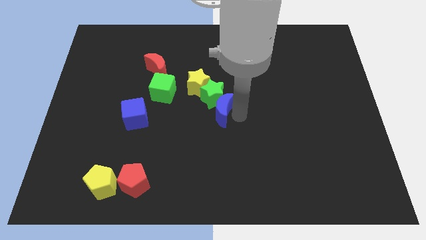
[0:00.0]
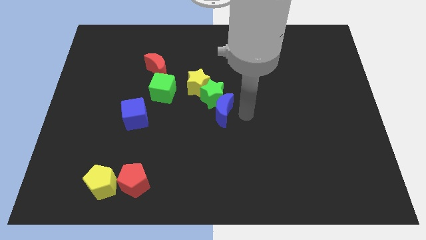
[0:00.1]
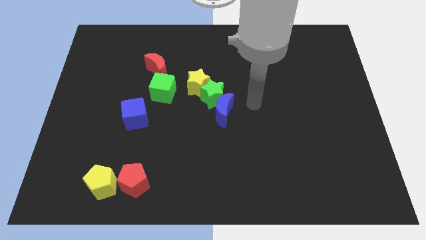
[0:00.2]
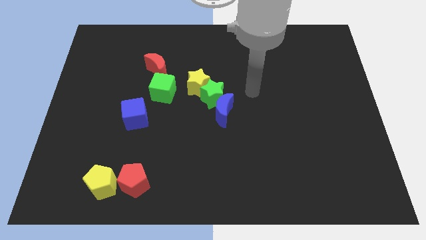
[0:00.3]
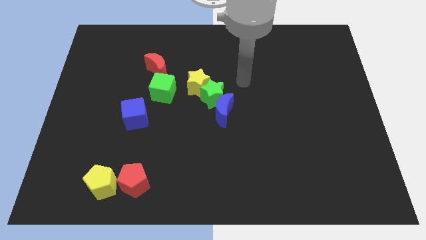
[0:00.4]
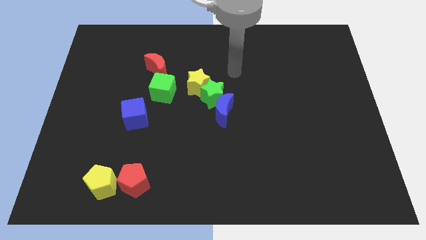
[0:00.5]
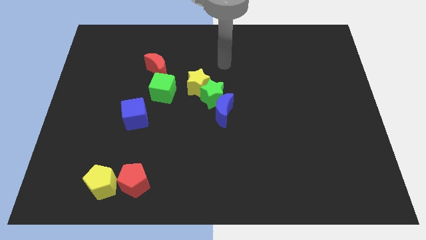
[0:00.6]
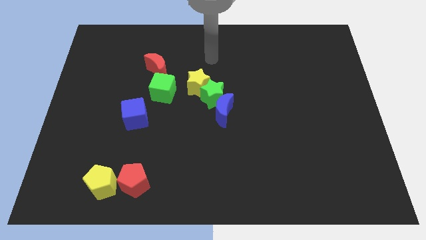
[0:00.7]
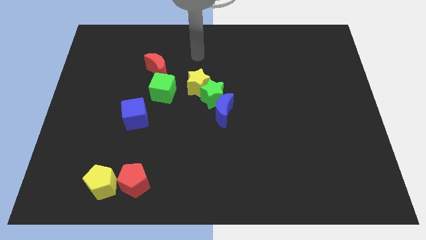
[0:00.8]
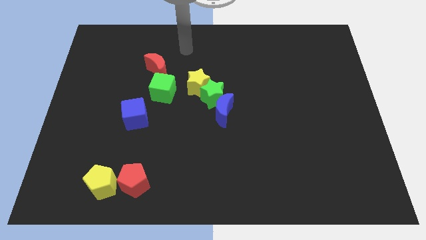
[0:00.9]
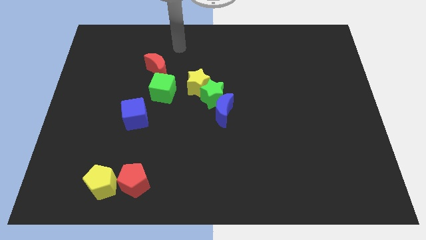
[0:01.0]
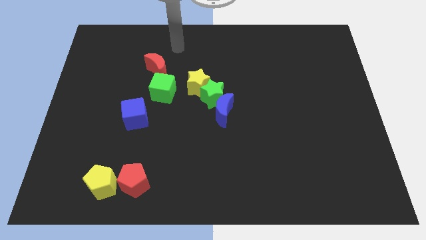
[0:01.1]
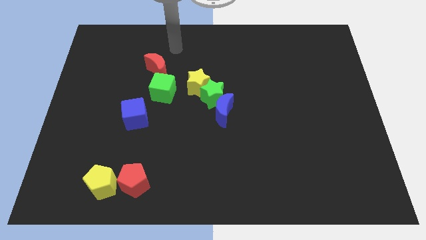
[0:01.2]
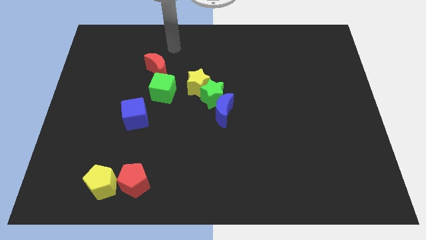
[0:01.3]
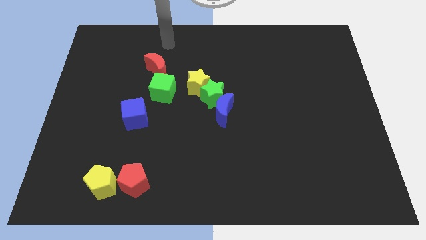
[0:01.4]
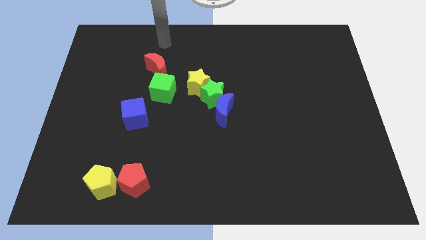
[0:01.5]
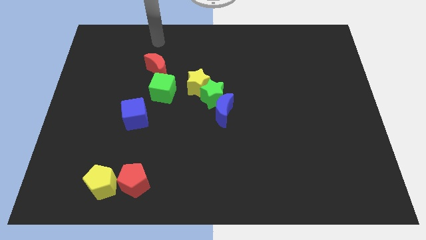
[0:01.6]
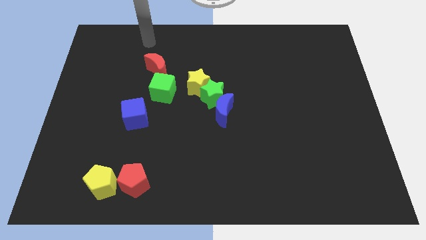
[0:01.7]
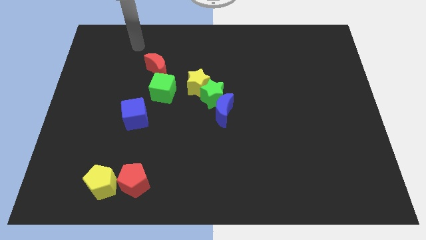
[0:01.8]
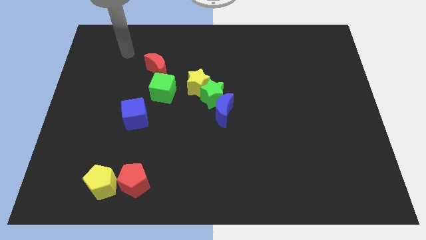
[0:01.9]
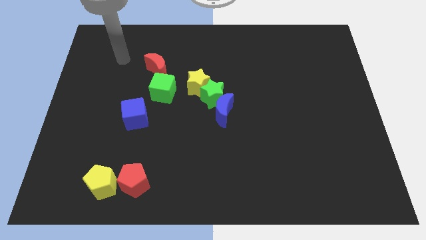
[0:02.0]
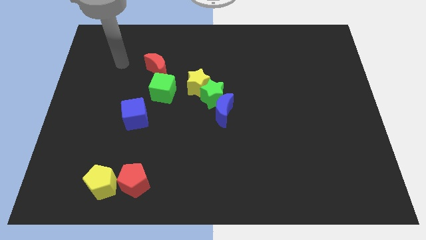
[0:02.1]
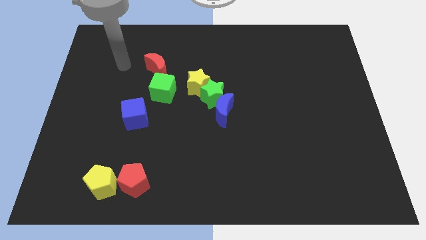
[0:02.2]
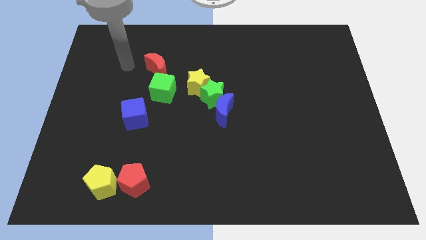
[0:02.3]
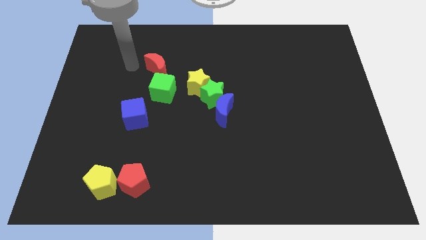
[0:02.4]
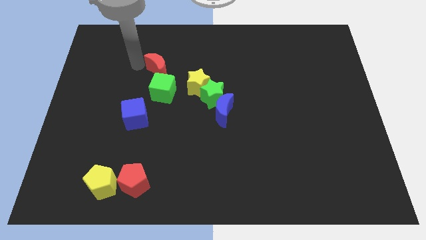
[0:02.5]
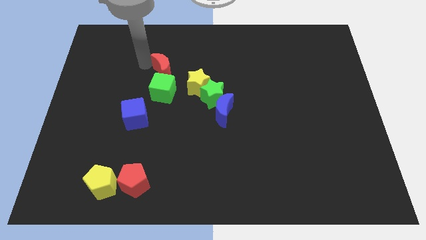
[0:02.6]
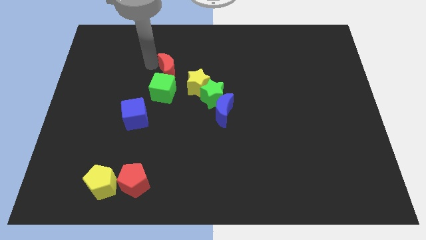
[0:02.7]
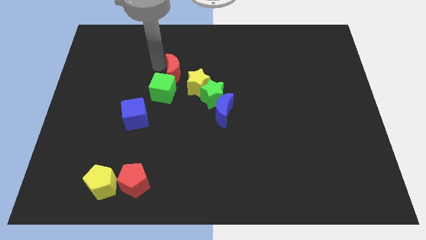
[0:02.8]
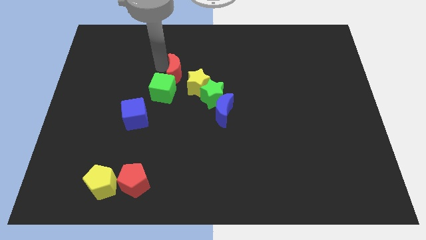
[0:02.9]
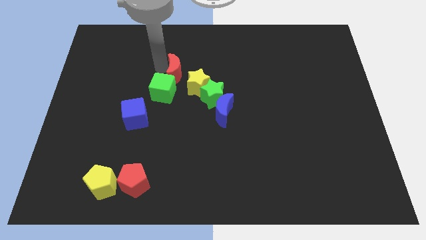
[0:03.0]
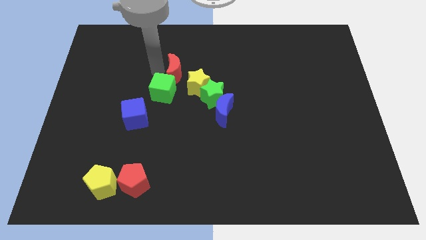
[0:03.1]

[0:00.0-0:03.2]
slightly push the red crescent towards the center of the board

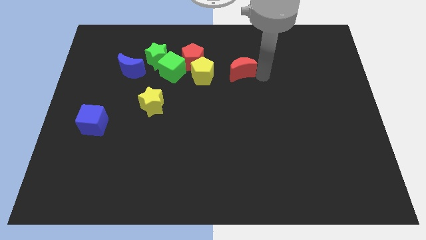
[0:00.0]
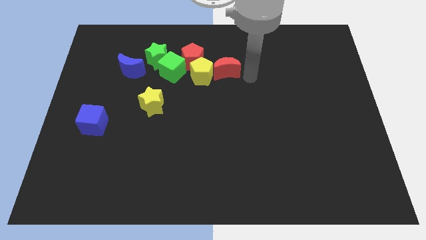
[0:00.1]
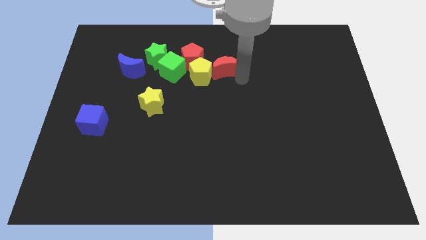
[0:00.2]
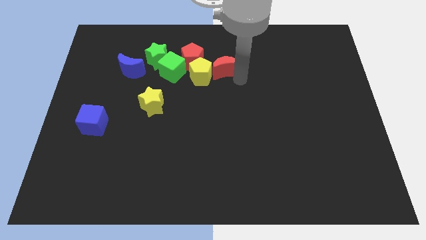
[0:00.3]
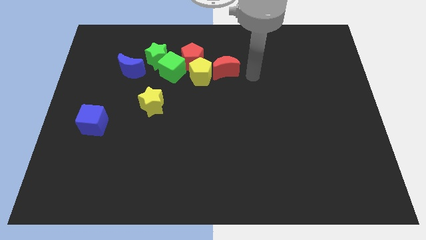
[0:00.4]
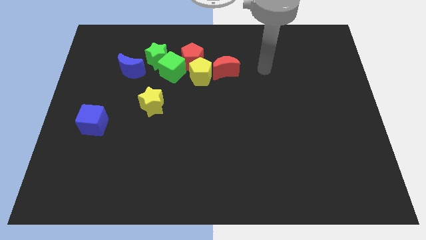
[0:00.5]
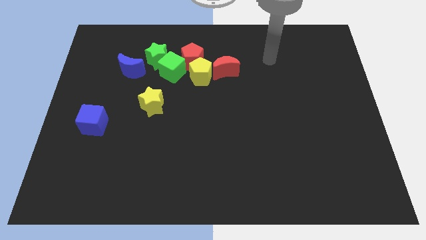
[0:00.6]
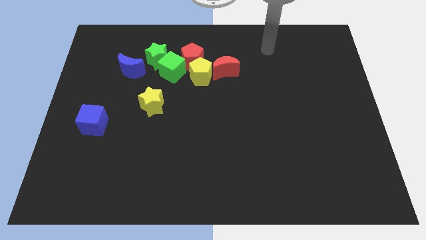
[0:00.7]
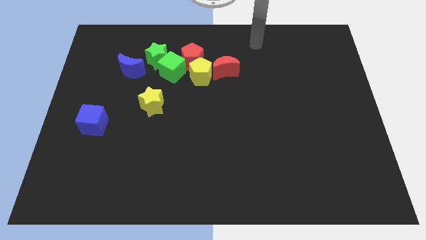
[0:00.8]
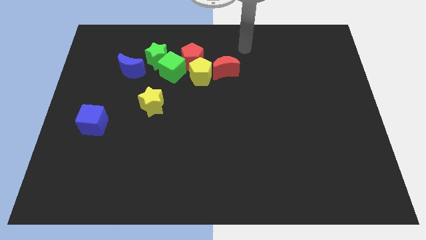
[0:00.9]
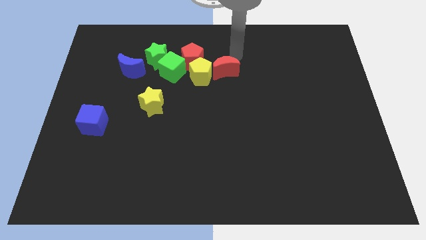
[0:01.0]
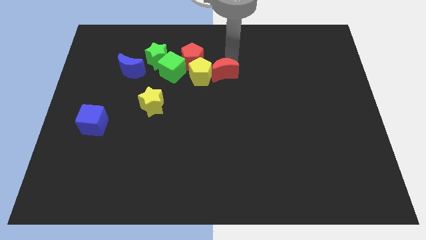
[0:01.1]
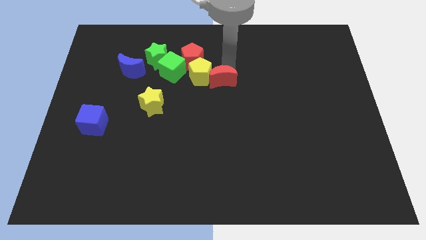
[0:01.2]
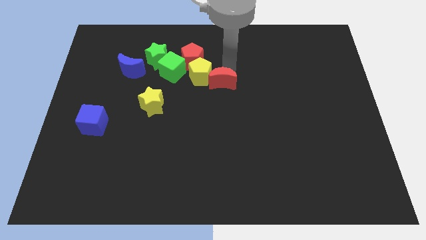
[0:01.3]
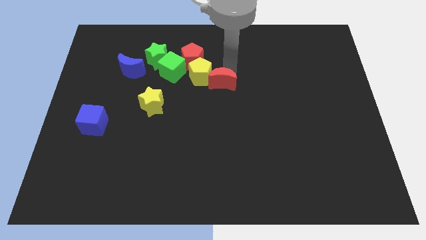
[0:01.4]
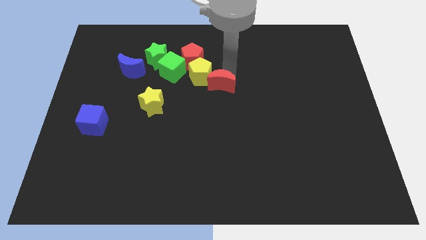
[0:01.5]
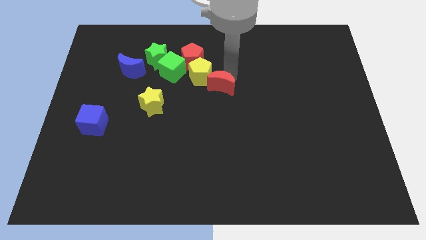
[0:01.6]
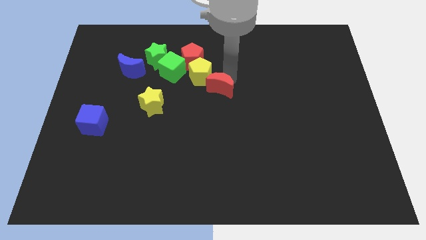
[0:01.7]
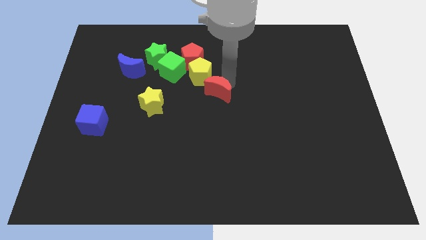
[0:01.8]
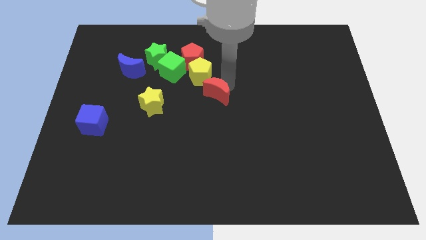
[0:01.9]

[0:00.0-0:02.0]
push the red moon to the bottom right of the yellow pentagon

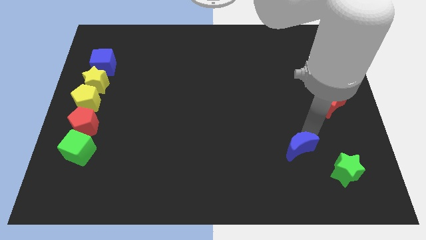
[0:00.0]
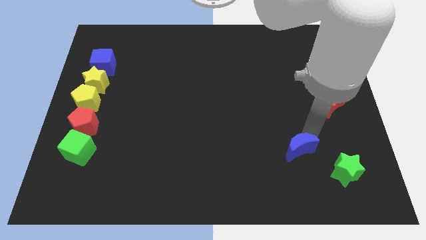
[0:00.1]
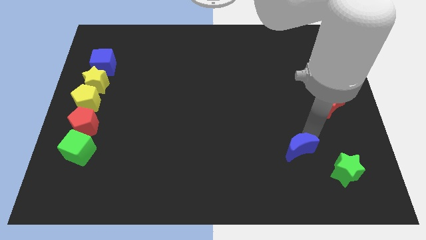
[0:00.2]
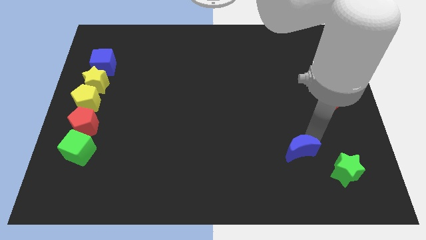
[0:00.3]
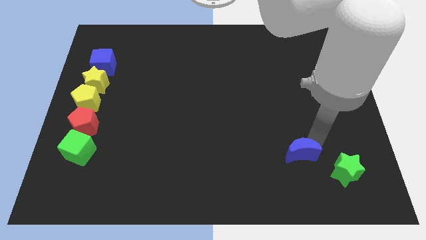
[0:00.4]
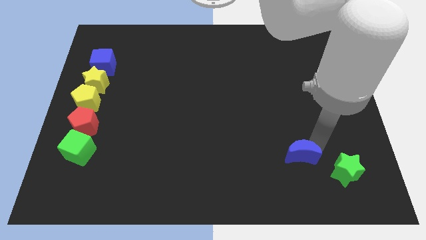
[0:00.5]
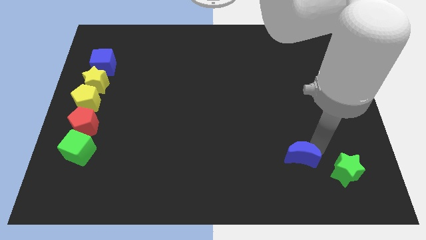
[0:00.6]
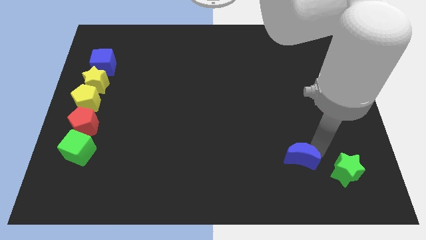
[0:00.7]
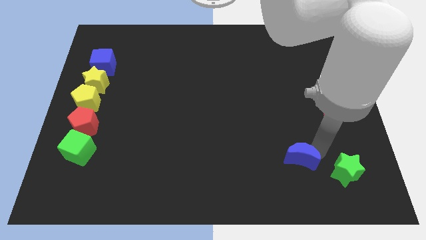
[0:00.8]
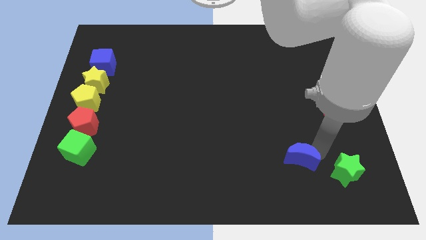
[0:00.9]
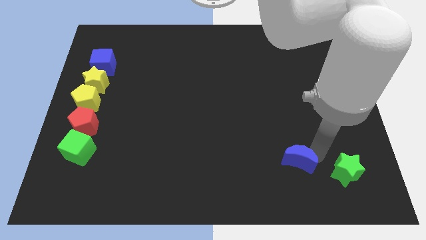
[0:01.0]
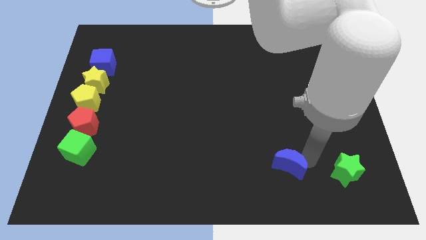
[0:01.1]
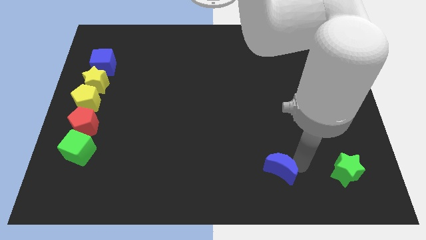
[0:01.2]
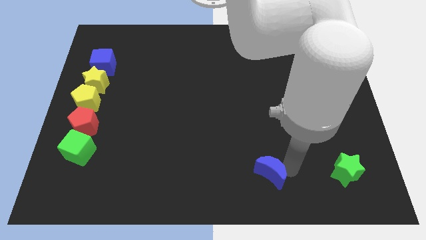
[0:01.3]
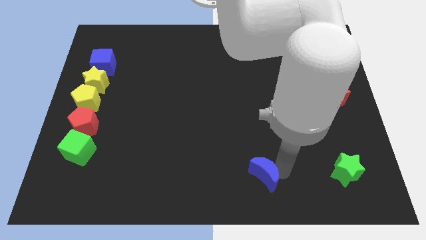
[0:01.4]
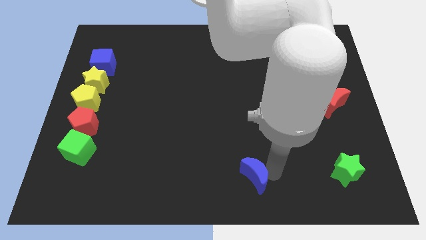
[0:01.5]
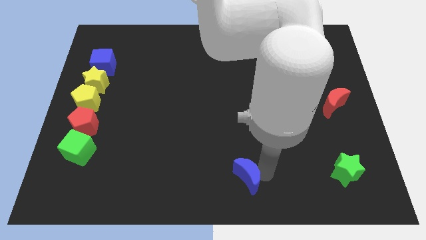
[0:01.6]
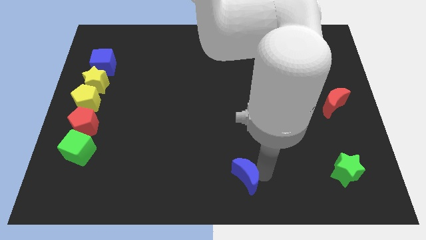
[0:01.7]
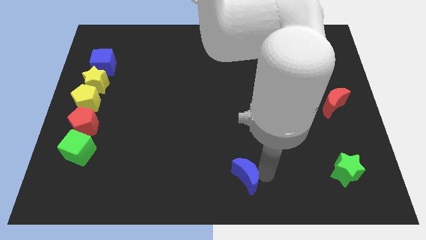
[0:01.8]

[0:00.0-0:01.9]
place blue moon parallel to green star

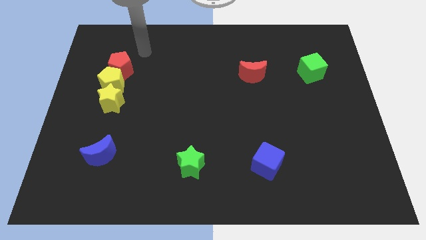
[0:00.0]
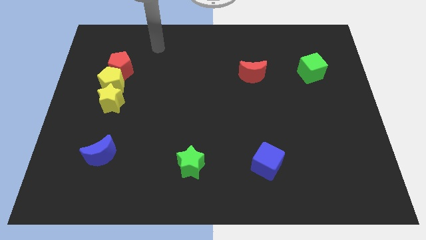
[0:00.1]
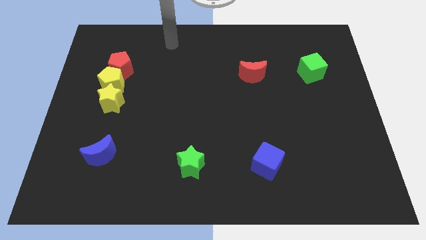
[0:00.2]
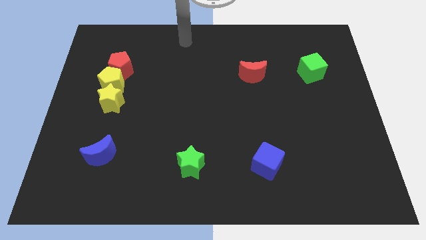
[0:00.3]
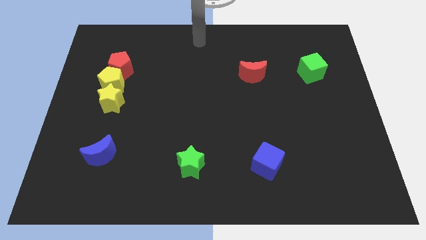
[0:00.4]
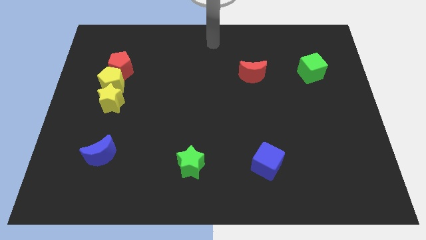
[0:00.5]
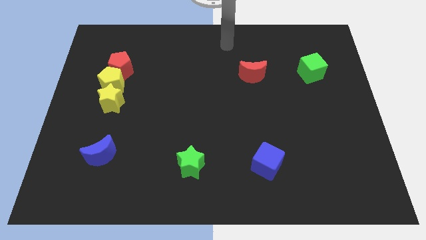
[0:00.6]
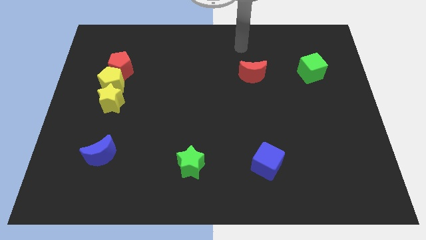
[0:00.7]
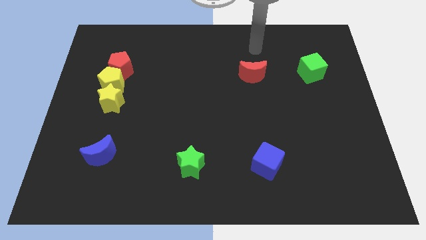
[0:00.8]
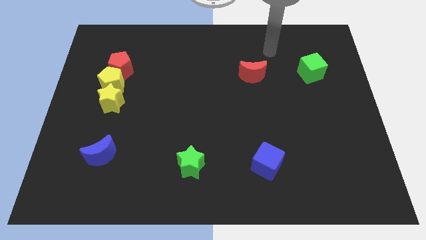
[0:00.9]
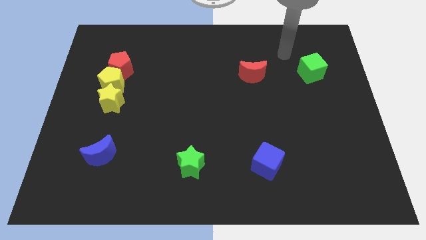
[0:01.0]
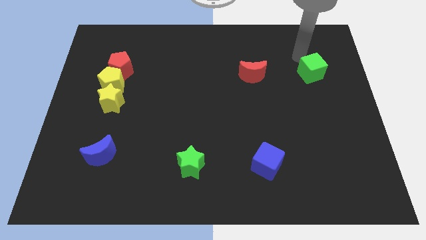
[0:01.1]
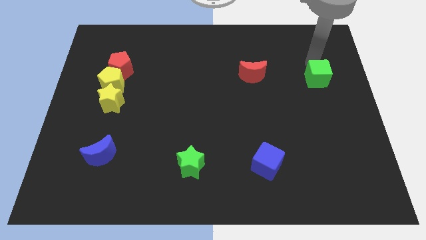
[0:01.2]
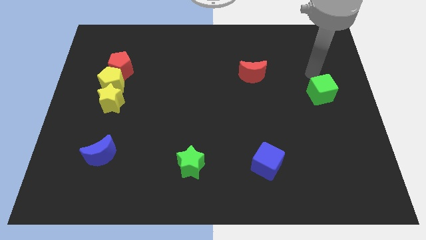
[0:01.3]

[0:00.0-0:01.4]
tap the green cube

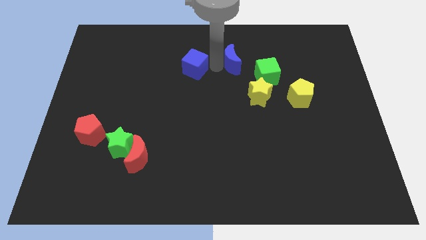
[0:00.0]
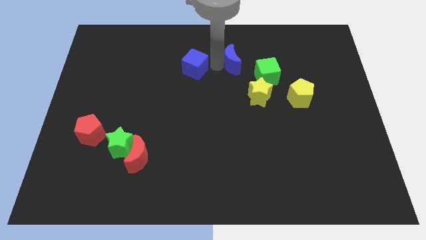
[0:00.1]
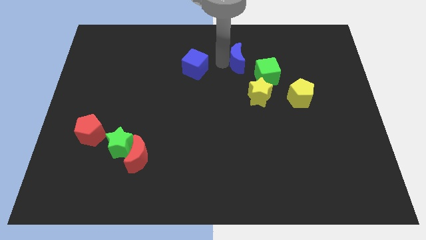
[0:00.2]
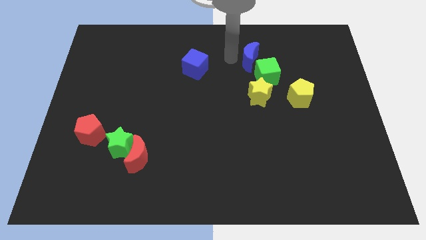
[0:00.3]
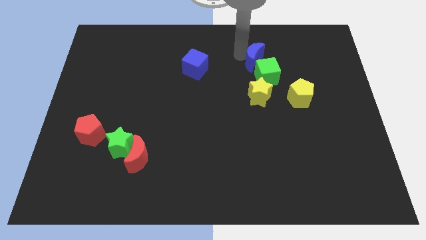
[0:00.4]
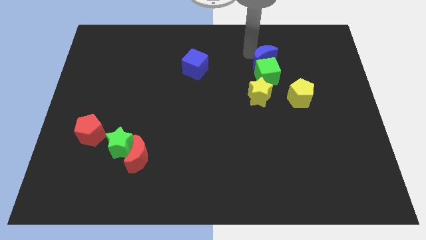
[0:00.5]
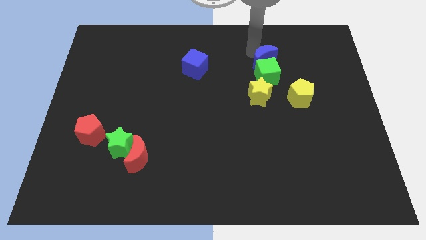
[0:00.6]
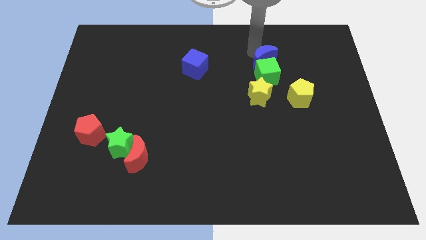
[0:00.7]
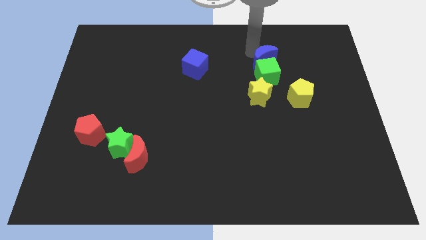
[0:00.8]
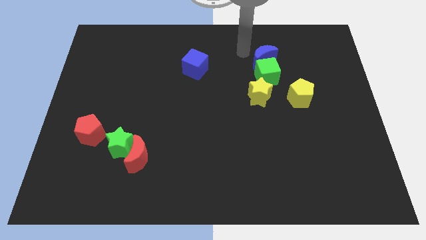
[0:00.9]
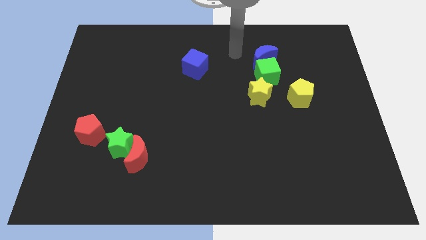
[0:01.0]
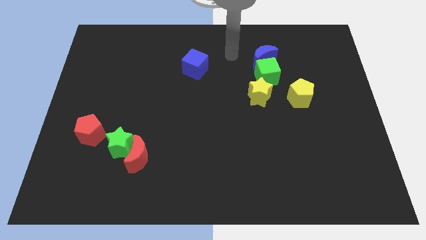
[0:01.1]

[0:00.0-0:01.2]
move the blue crescent to the top side of the green cube
